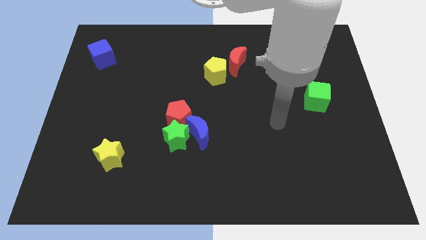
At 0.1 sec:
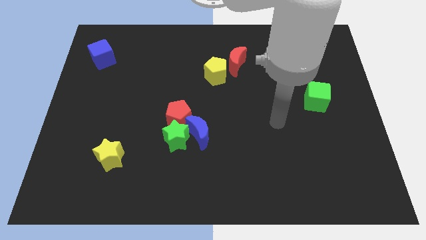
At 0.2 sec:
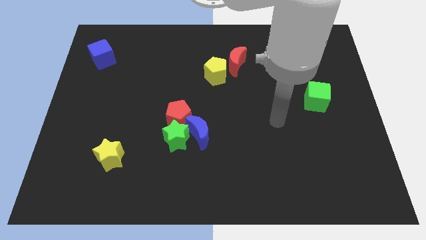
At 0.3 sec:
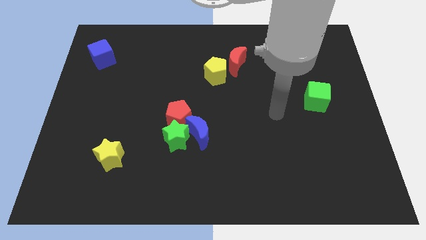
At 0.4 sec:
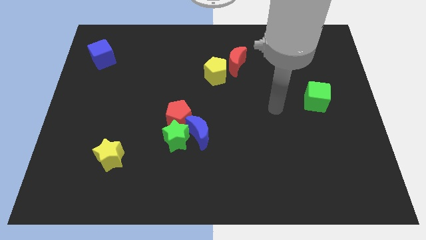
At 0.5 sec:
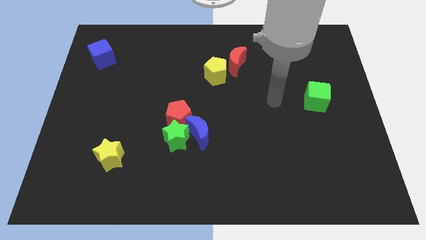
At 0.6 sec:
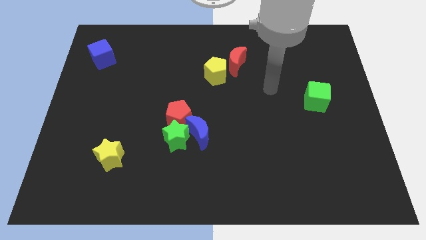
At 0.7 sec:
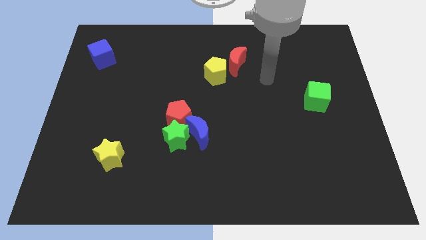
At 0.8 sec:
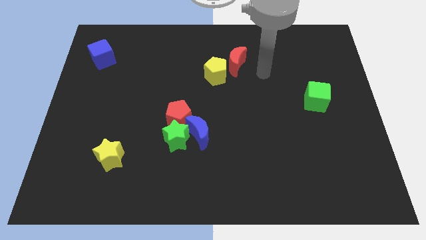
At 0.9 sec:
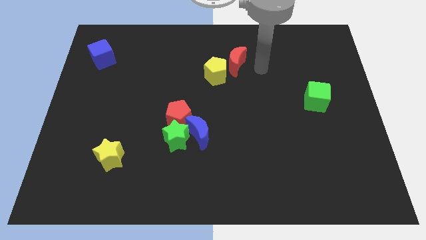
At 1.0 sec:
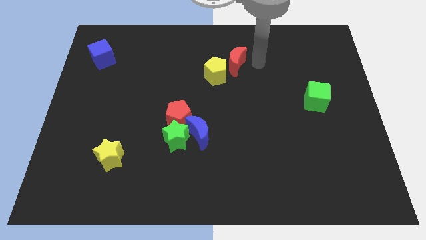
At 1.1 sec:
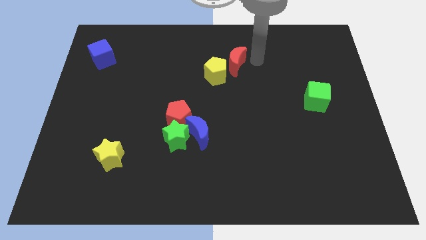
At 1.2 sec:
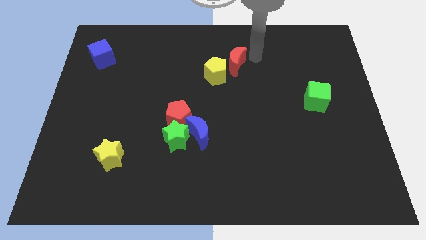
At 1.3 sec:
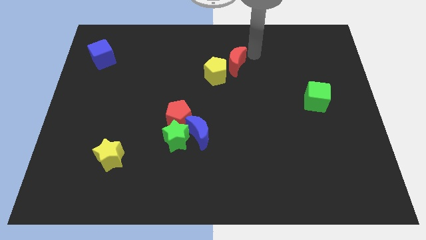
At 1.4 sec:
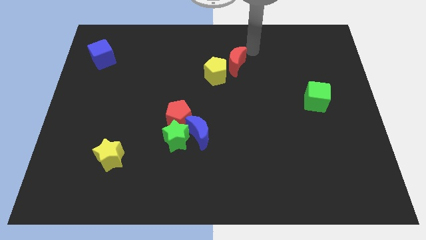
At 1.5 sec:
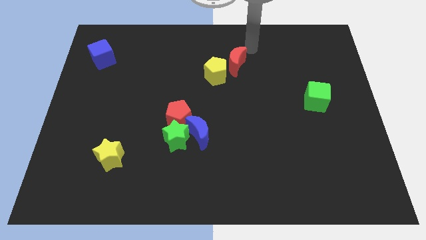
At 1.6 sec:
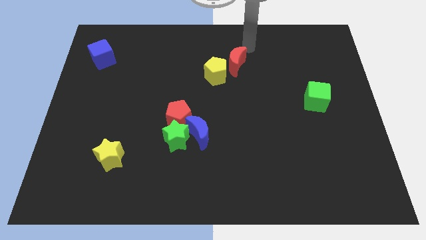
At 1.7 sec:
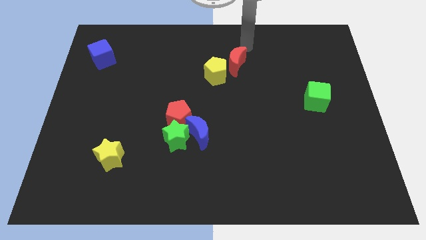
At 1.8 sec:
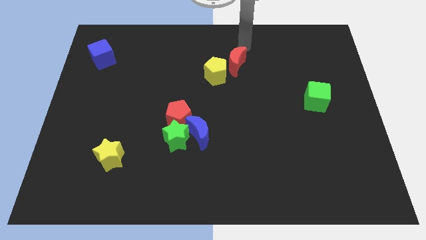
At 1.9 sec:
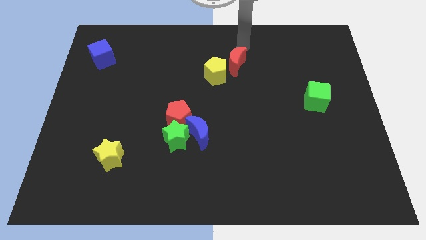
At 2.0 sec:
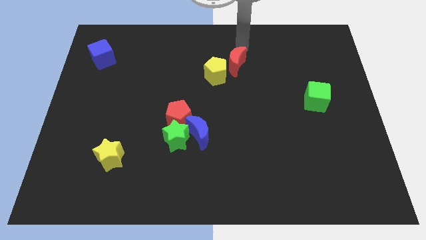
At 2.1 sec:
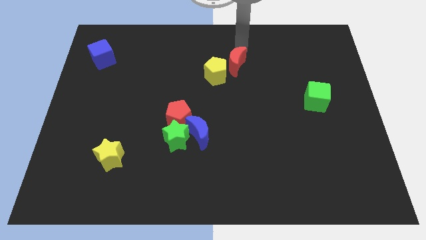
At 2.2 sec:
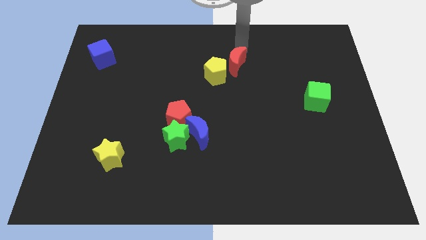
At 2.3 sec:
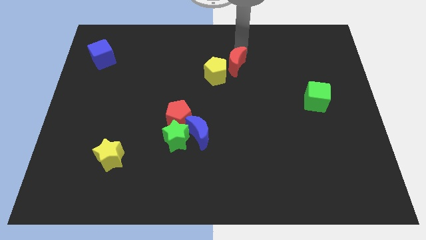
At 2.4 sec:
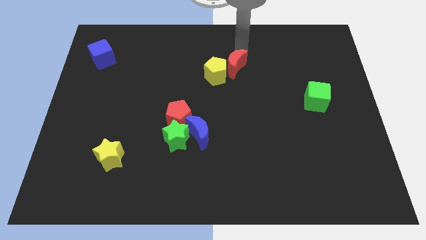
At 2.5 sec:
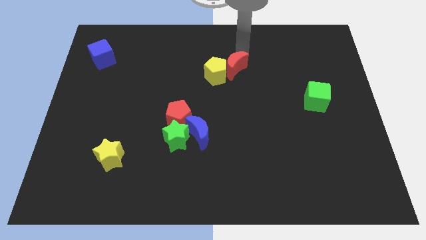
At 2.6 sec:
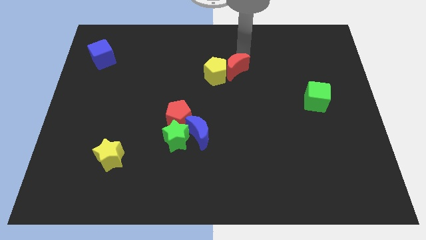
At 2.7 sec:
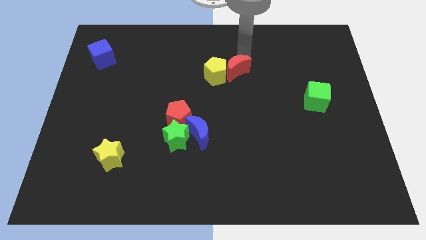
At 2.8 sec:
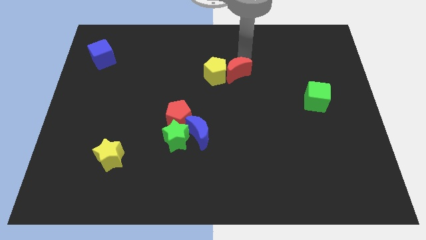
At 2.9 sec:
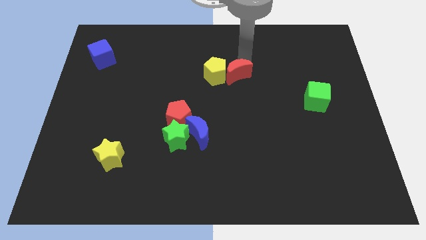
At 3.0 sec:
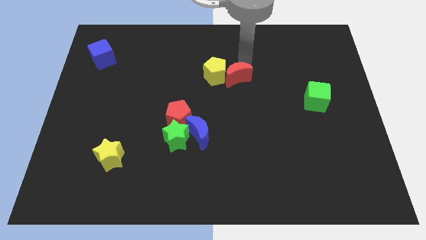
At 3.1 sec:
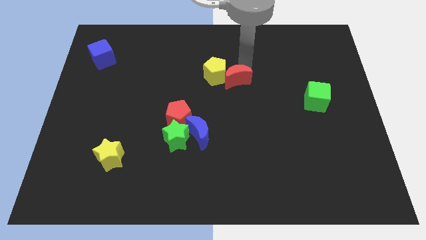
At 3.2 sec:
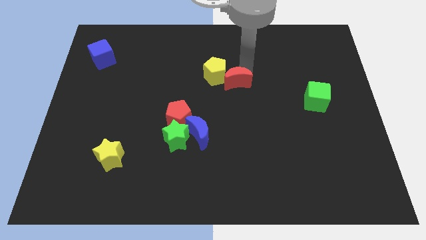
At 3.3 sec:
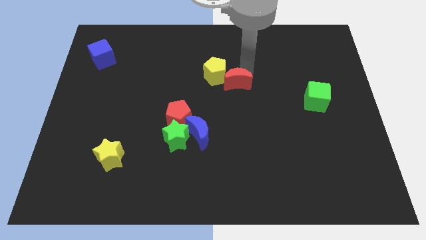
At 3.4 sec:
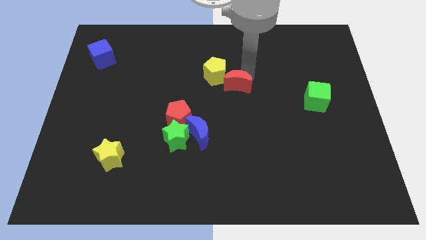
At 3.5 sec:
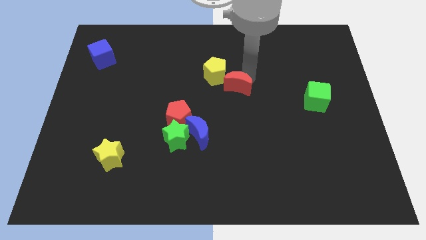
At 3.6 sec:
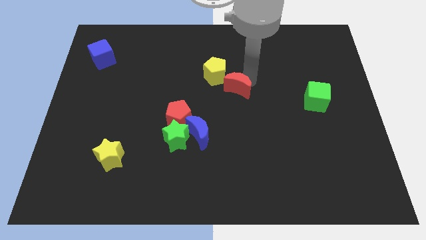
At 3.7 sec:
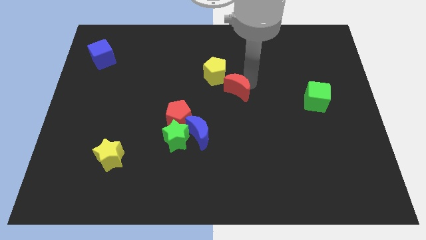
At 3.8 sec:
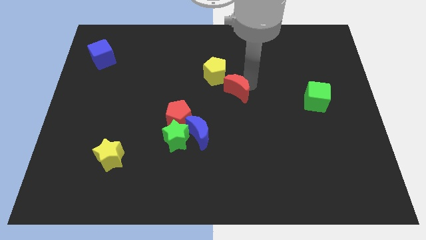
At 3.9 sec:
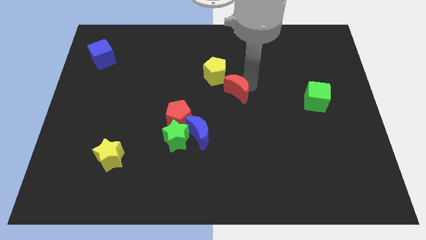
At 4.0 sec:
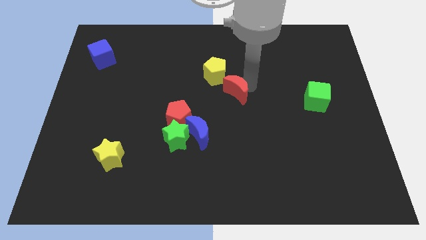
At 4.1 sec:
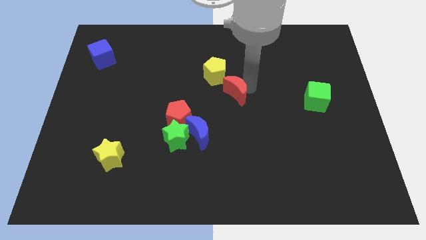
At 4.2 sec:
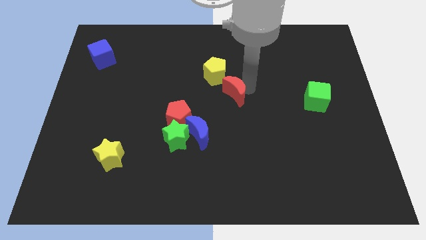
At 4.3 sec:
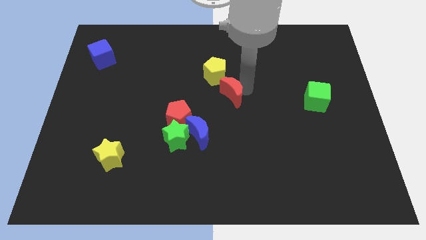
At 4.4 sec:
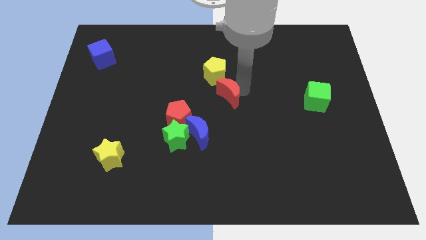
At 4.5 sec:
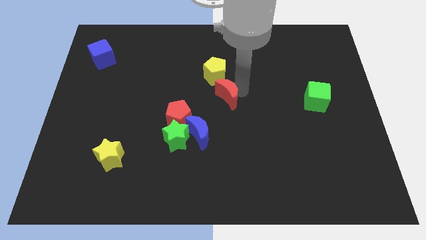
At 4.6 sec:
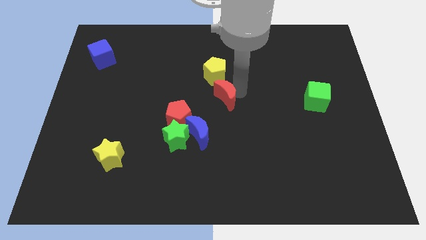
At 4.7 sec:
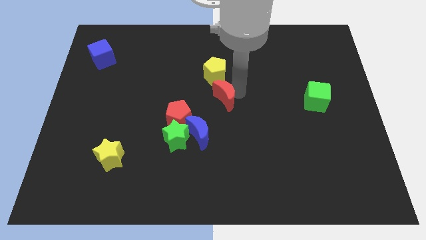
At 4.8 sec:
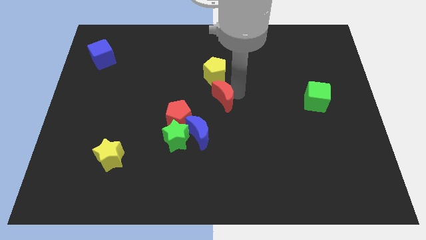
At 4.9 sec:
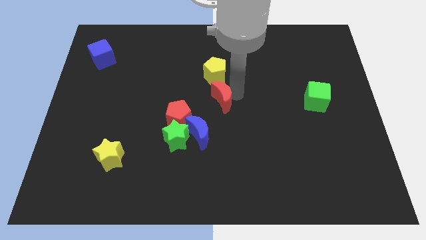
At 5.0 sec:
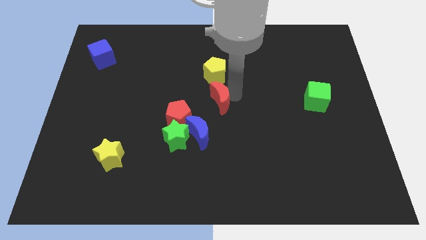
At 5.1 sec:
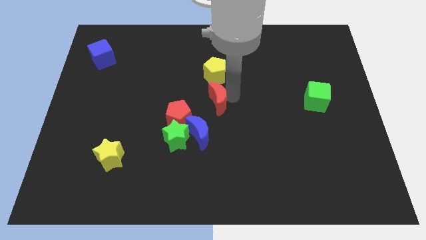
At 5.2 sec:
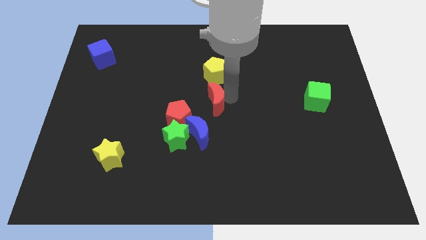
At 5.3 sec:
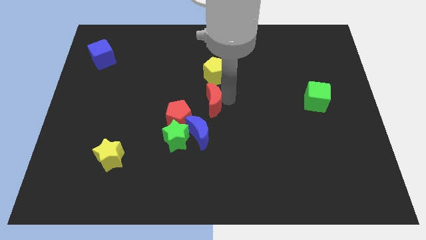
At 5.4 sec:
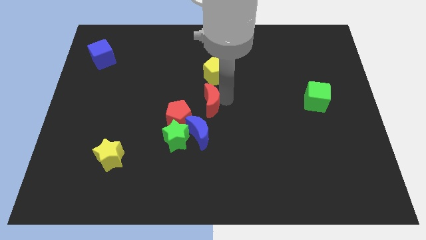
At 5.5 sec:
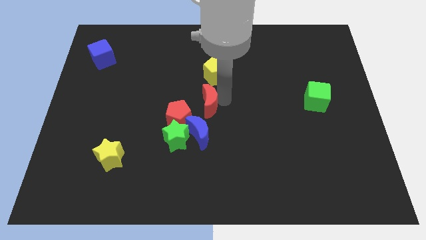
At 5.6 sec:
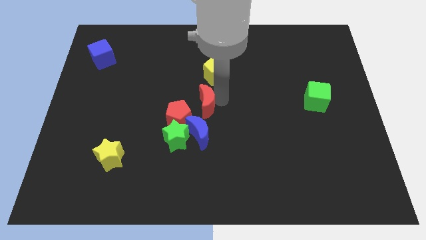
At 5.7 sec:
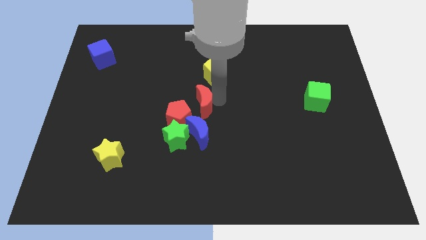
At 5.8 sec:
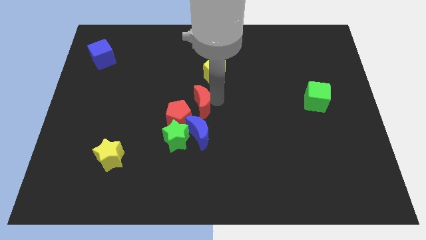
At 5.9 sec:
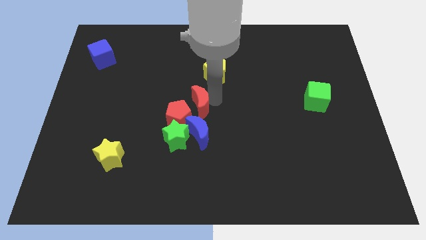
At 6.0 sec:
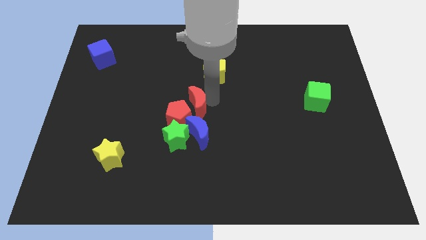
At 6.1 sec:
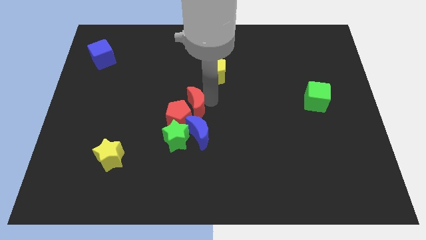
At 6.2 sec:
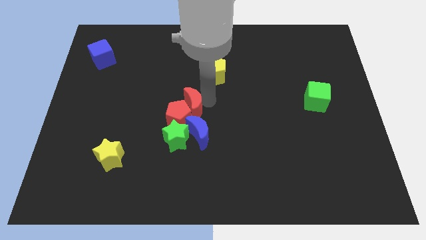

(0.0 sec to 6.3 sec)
put the red moon close to the red pentagon

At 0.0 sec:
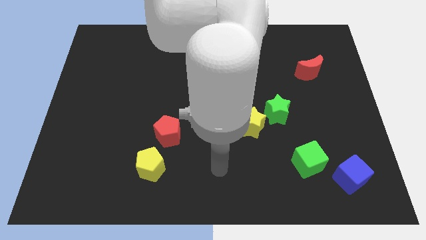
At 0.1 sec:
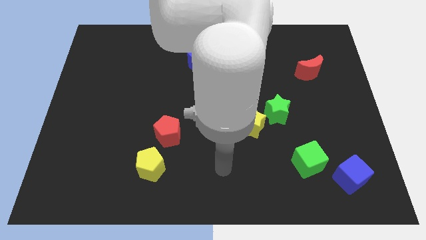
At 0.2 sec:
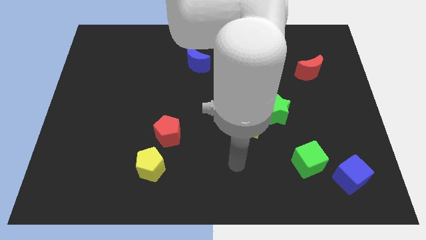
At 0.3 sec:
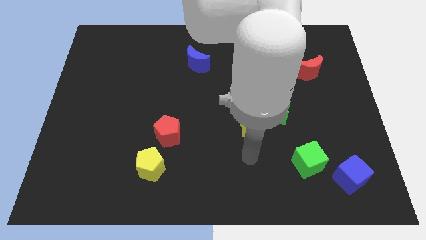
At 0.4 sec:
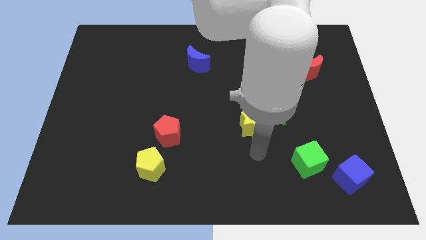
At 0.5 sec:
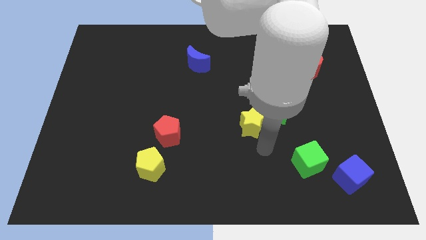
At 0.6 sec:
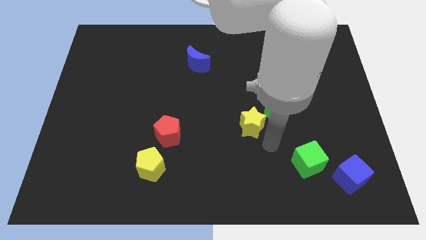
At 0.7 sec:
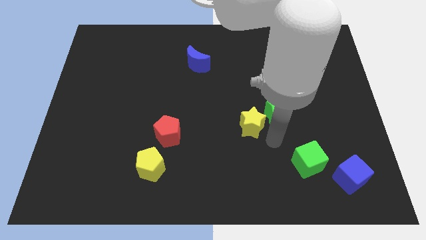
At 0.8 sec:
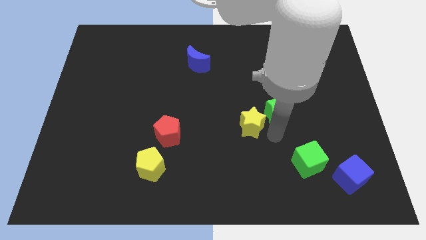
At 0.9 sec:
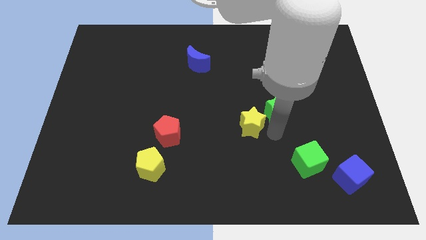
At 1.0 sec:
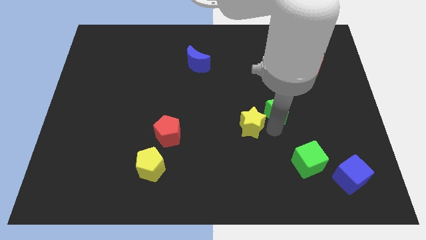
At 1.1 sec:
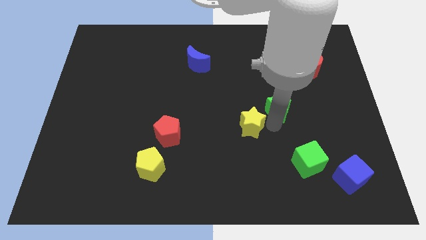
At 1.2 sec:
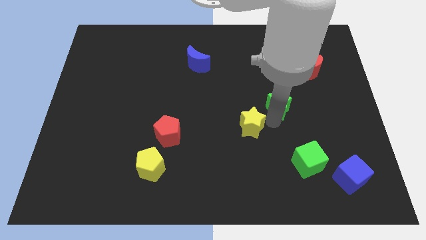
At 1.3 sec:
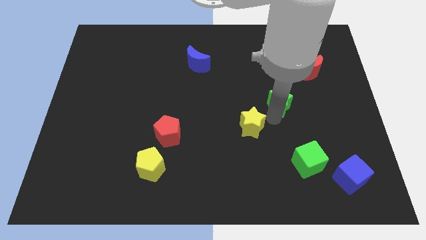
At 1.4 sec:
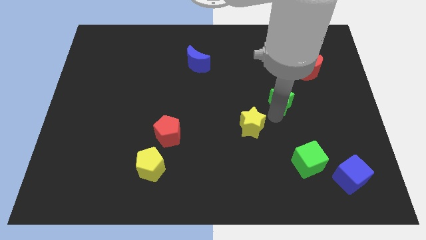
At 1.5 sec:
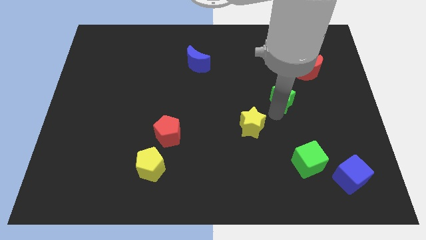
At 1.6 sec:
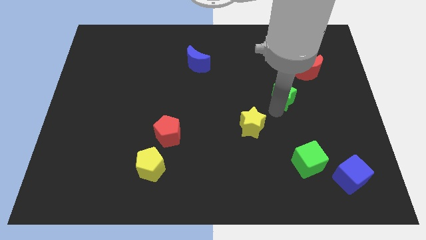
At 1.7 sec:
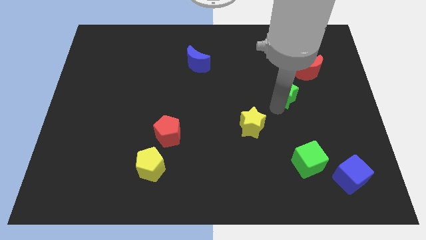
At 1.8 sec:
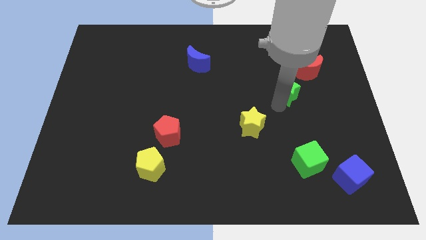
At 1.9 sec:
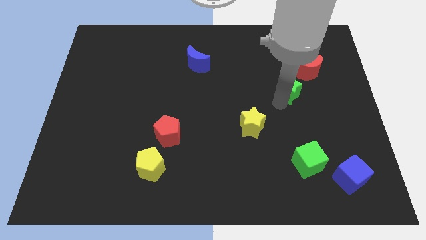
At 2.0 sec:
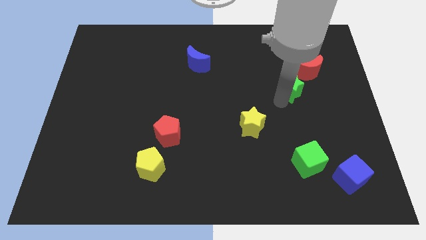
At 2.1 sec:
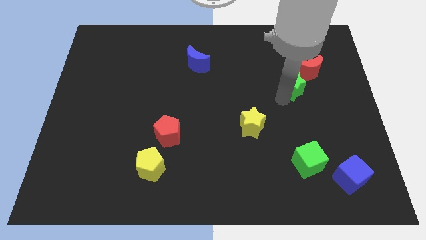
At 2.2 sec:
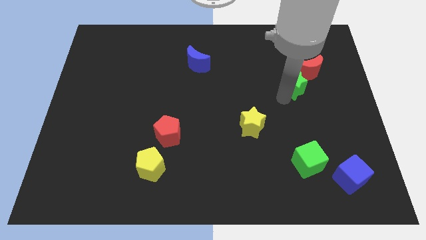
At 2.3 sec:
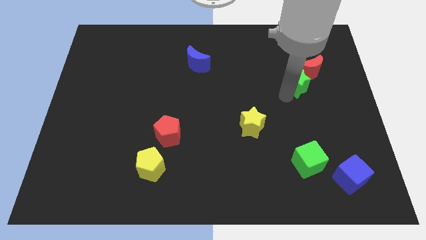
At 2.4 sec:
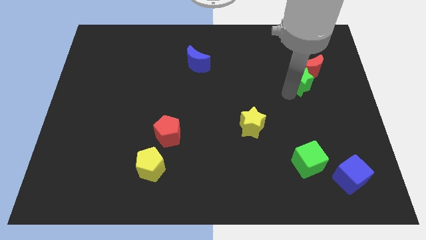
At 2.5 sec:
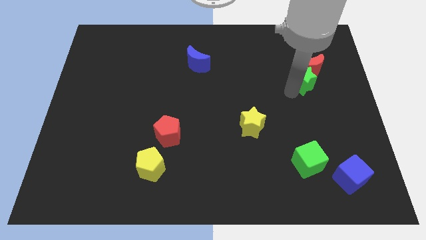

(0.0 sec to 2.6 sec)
move the green star close to the red moon
